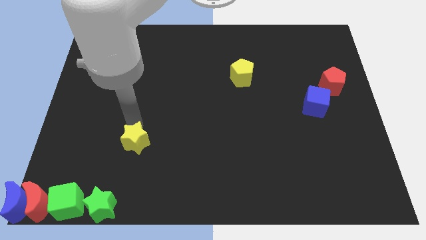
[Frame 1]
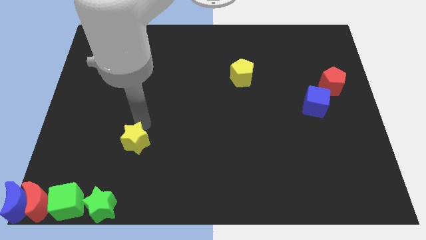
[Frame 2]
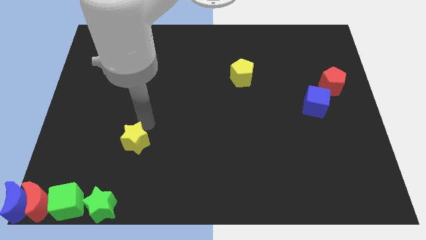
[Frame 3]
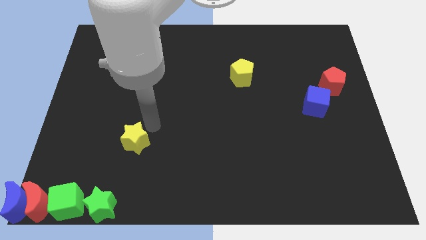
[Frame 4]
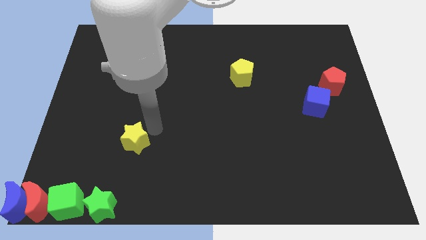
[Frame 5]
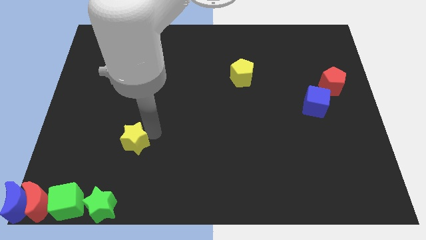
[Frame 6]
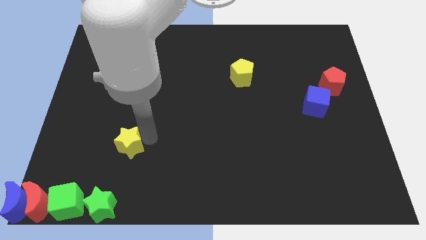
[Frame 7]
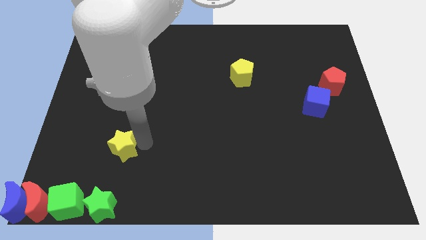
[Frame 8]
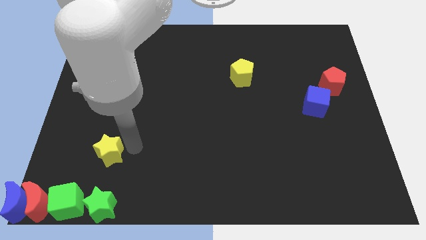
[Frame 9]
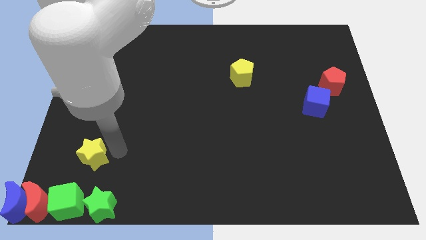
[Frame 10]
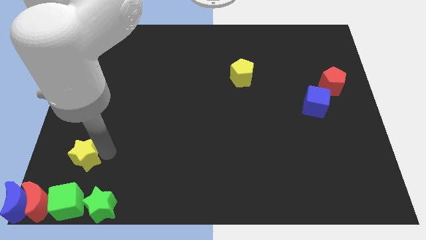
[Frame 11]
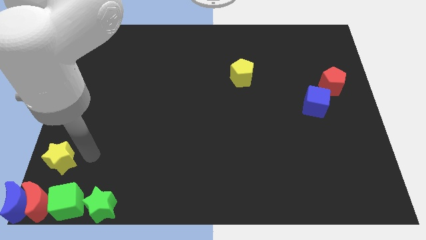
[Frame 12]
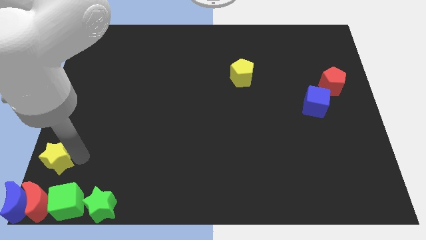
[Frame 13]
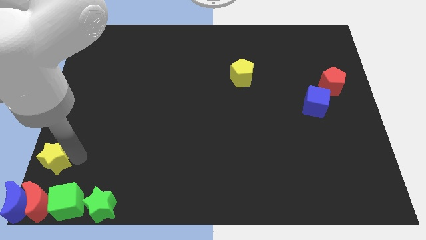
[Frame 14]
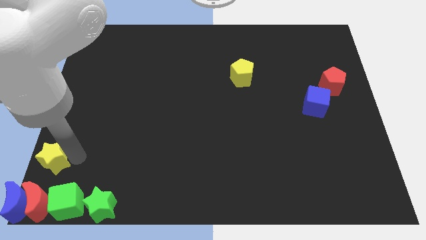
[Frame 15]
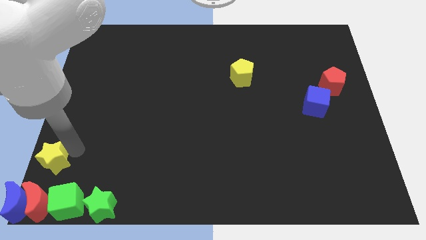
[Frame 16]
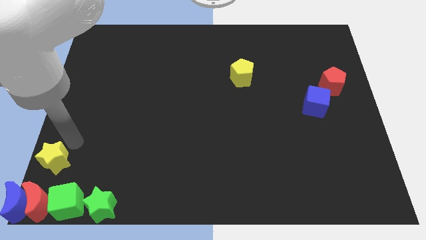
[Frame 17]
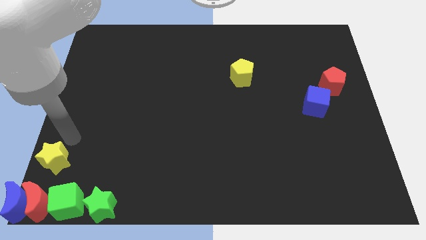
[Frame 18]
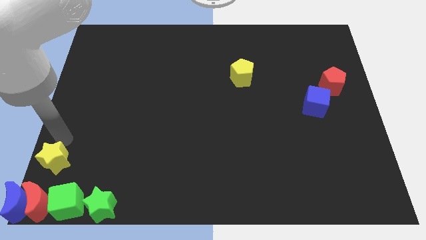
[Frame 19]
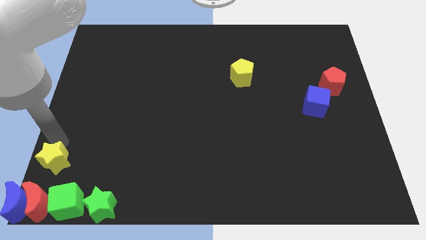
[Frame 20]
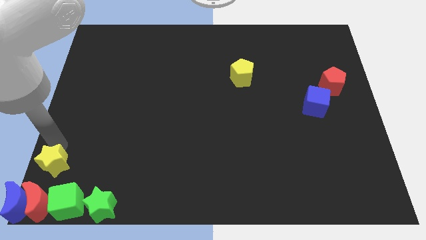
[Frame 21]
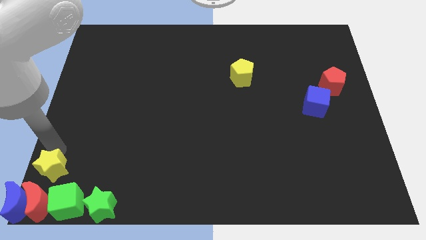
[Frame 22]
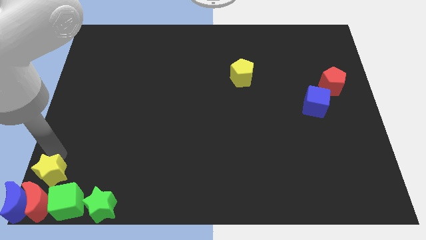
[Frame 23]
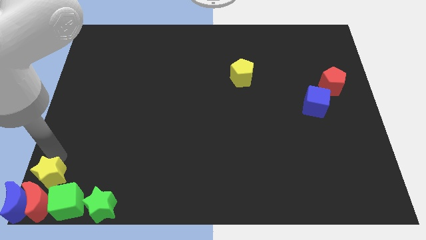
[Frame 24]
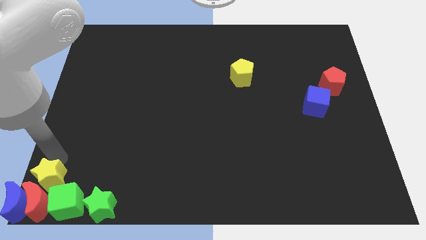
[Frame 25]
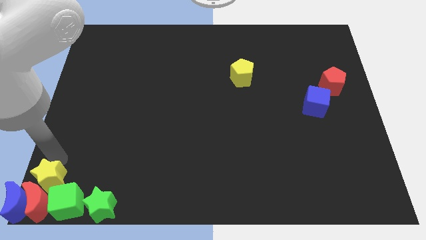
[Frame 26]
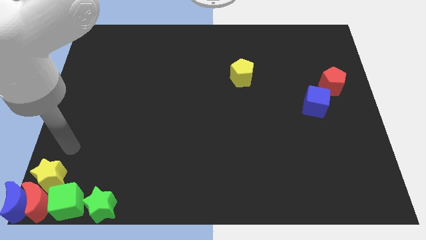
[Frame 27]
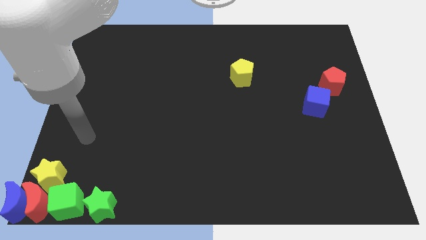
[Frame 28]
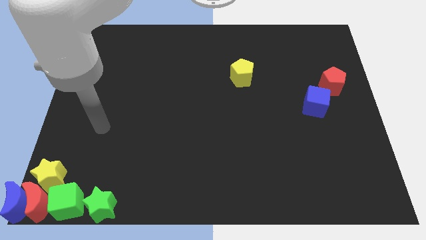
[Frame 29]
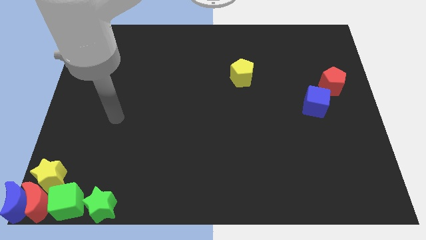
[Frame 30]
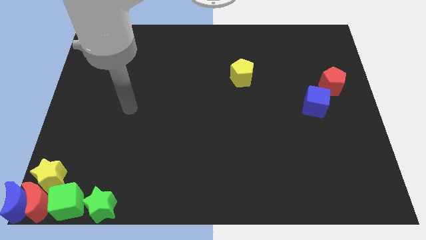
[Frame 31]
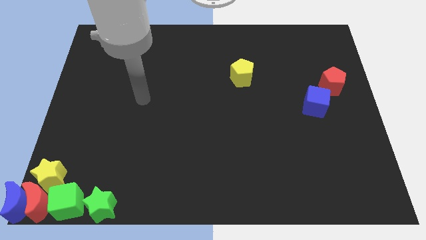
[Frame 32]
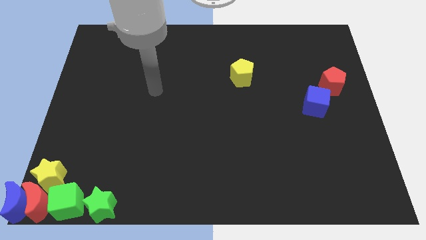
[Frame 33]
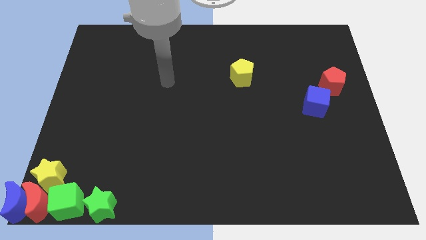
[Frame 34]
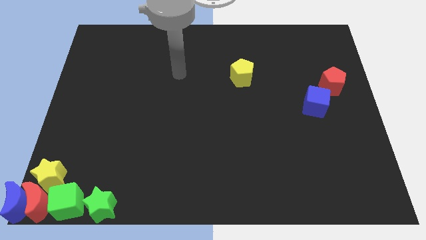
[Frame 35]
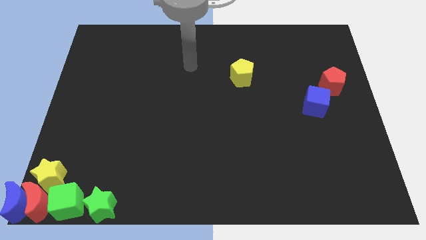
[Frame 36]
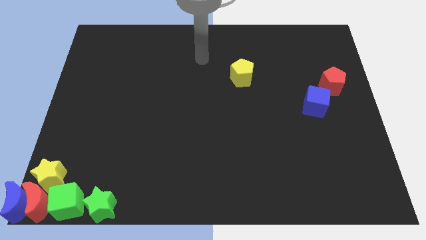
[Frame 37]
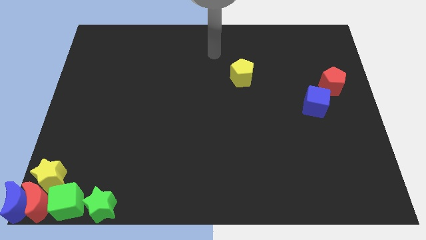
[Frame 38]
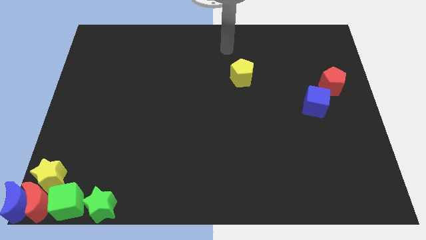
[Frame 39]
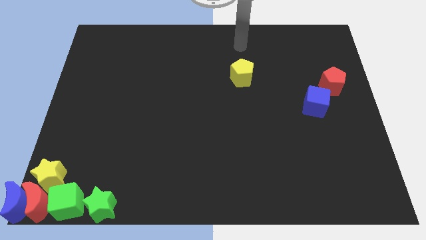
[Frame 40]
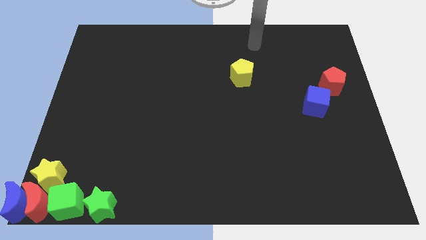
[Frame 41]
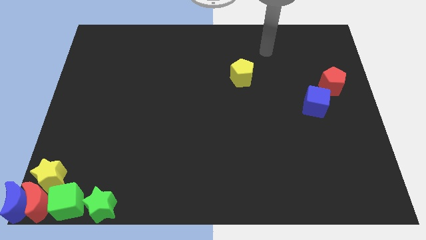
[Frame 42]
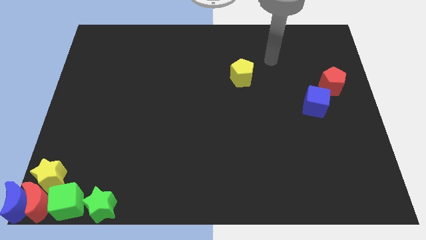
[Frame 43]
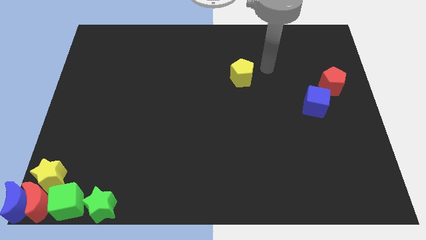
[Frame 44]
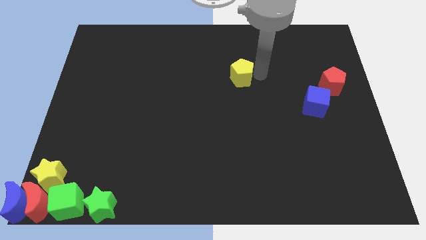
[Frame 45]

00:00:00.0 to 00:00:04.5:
push the yellow star to the bottom left of the board

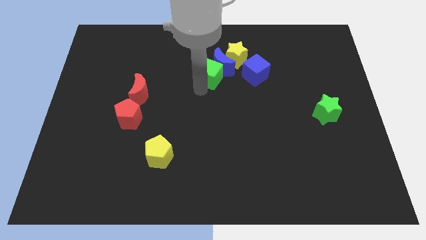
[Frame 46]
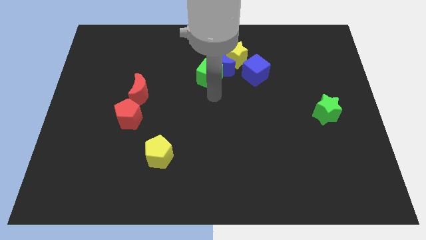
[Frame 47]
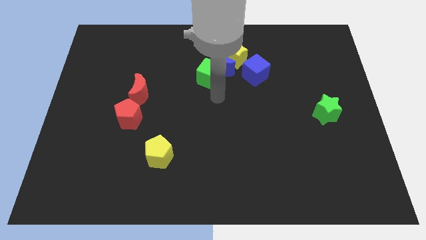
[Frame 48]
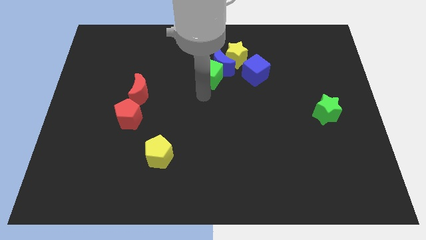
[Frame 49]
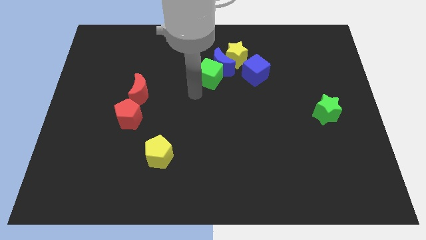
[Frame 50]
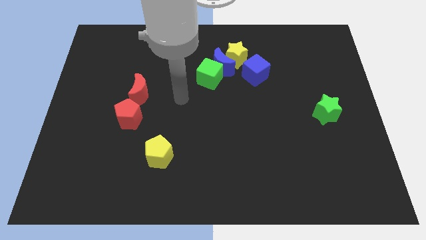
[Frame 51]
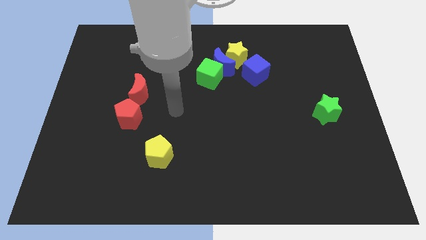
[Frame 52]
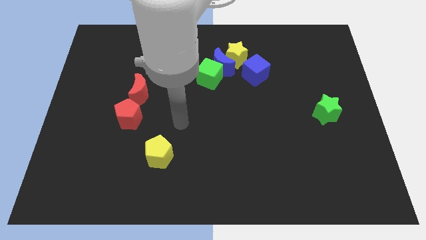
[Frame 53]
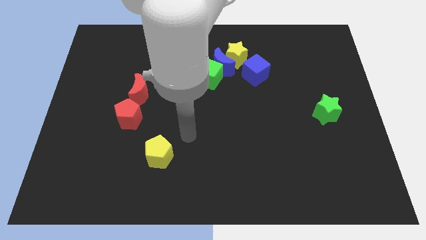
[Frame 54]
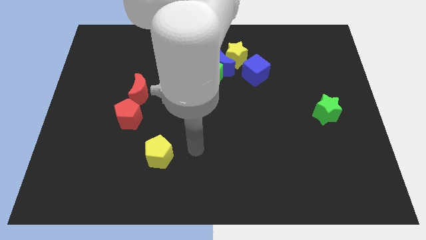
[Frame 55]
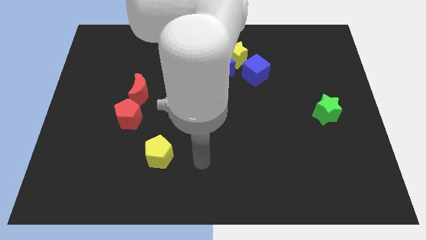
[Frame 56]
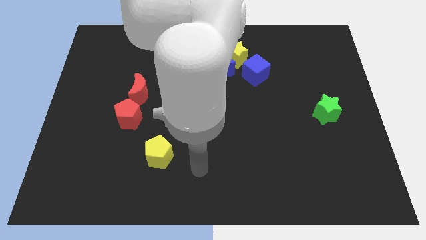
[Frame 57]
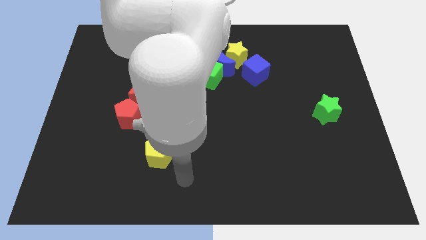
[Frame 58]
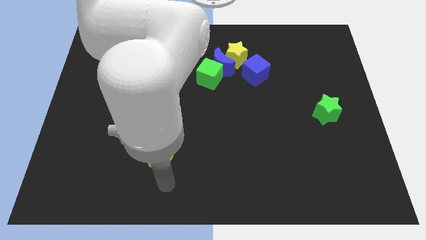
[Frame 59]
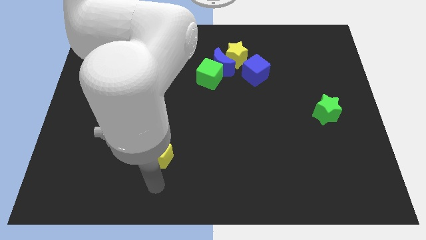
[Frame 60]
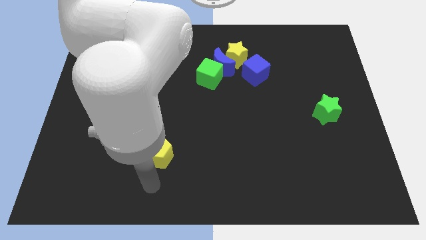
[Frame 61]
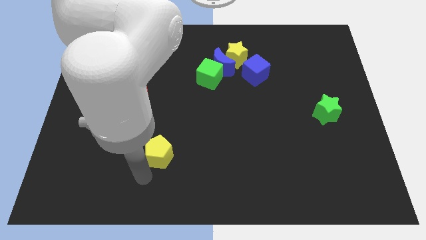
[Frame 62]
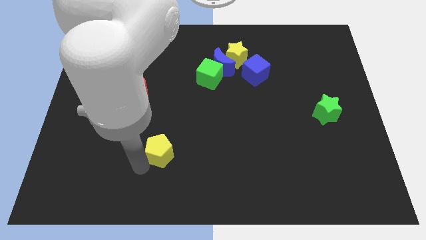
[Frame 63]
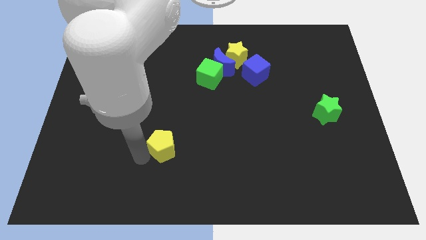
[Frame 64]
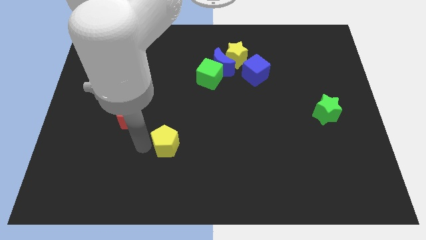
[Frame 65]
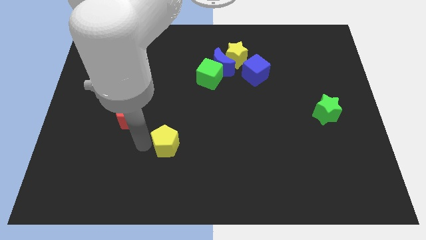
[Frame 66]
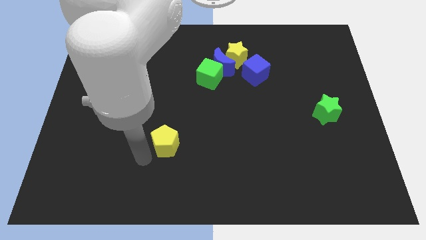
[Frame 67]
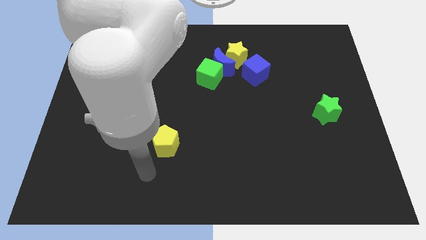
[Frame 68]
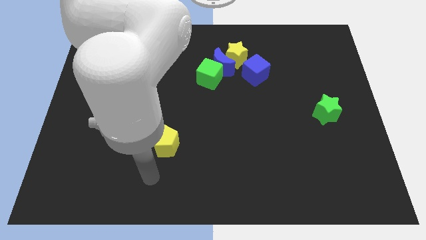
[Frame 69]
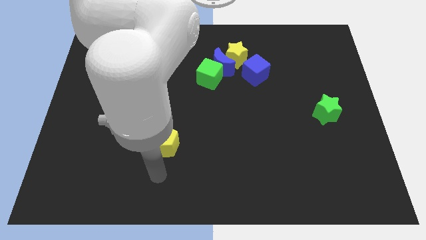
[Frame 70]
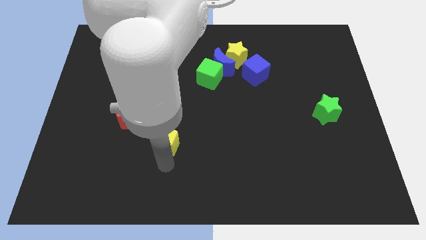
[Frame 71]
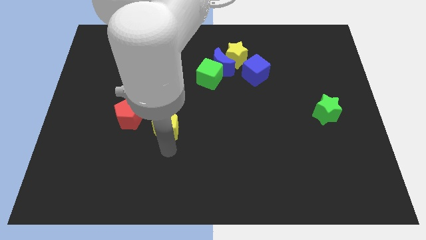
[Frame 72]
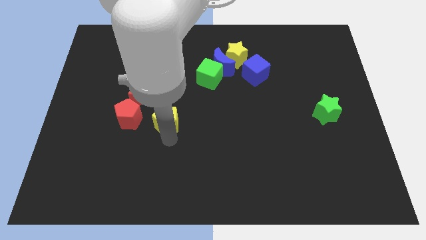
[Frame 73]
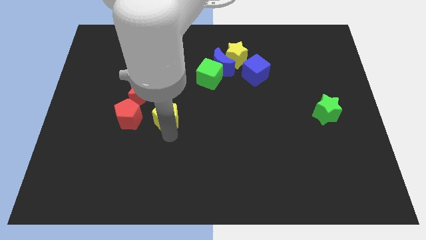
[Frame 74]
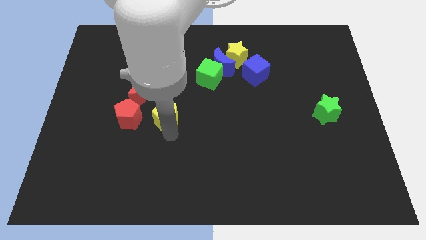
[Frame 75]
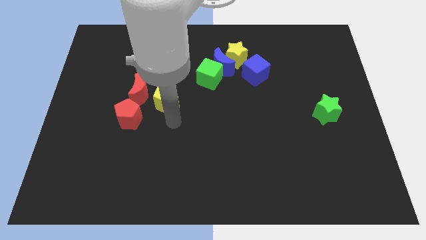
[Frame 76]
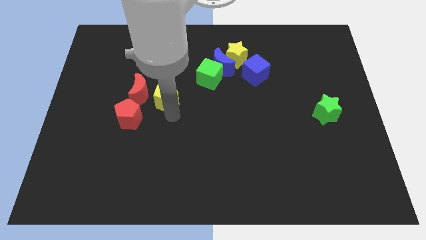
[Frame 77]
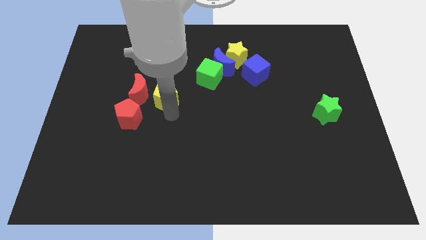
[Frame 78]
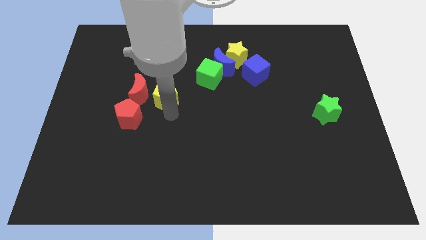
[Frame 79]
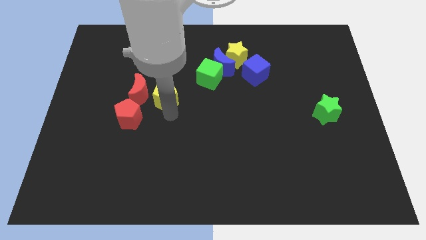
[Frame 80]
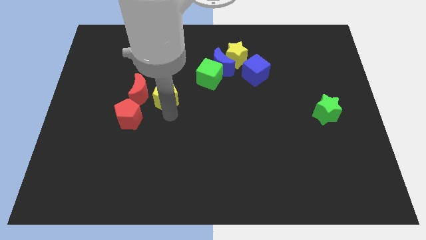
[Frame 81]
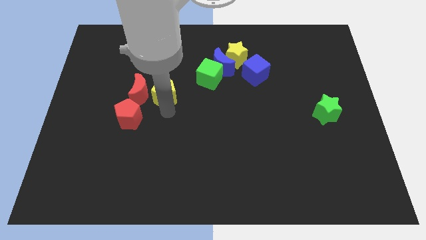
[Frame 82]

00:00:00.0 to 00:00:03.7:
place yellow pentagon to the right of the red moon

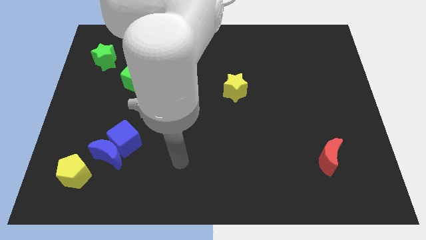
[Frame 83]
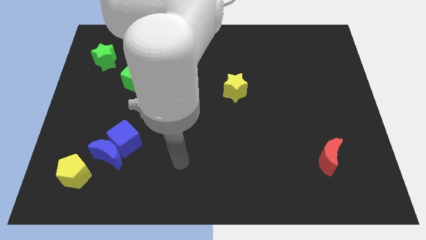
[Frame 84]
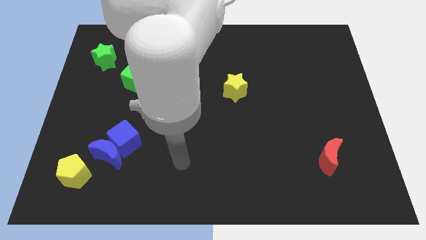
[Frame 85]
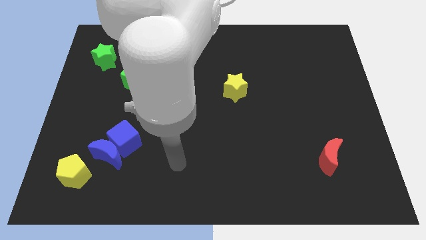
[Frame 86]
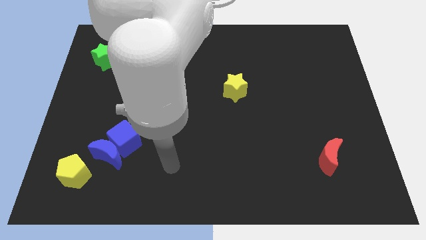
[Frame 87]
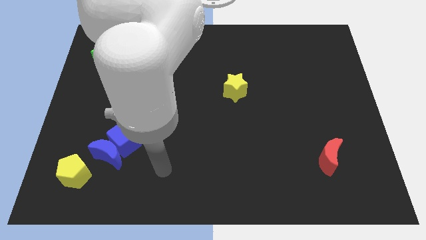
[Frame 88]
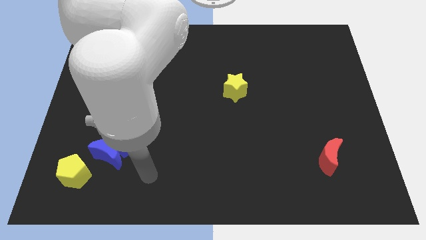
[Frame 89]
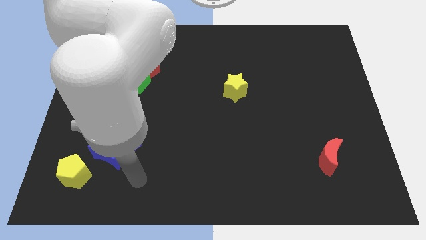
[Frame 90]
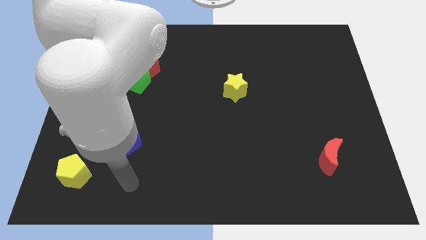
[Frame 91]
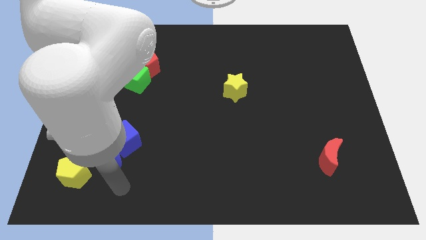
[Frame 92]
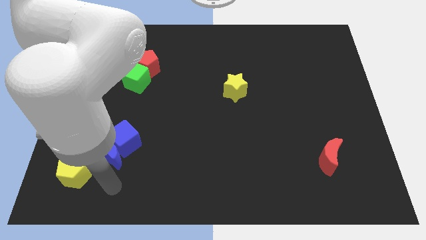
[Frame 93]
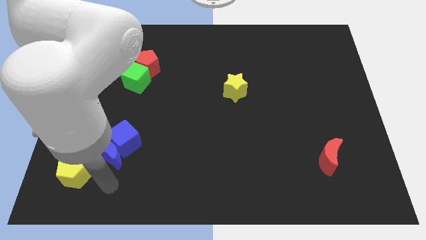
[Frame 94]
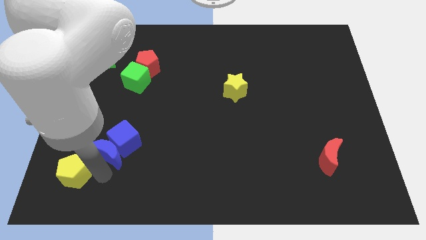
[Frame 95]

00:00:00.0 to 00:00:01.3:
point your arm to the right side of yellow pentagon
